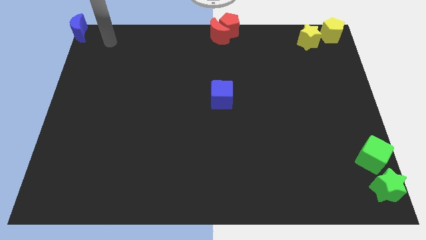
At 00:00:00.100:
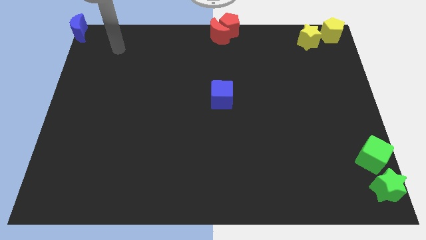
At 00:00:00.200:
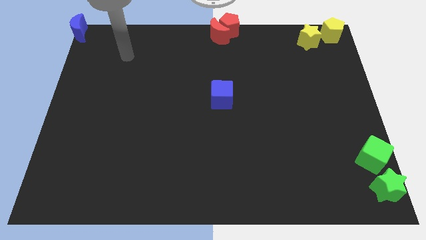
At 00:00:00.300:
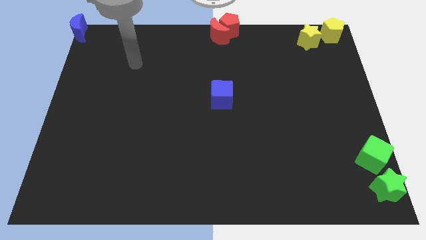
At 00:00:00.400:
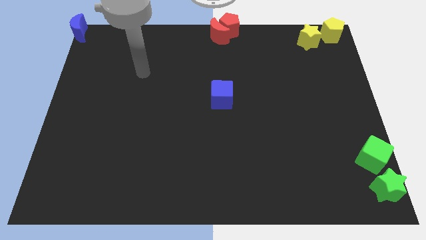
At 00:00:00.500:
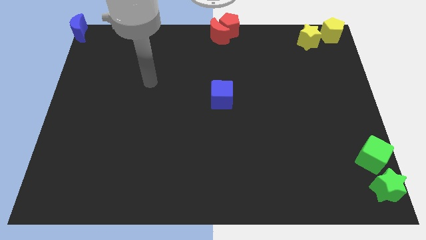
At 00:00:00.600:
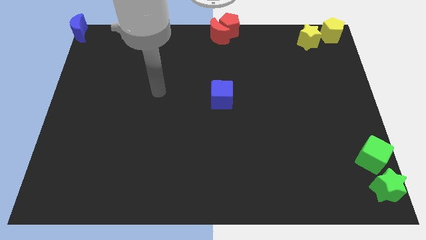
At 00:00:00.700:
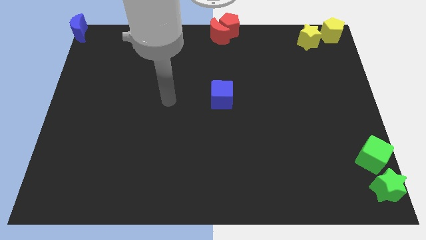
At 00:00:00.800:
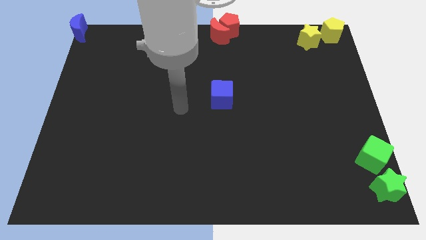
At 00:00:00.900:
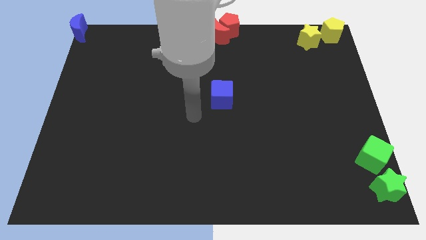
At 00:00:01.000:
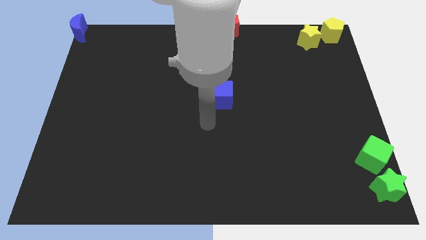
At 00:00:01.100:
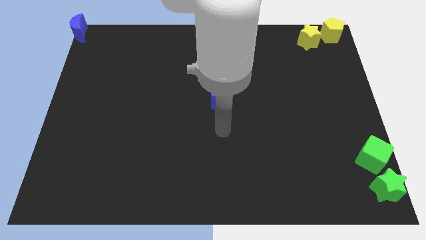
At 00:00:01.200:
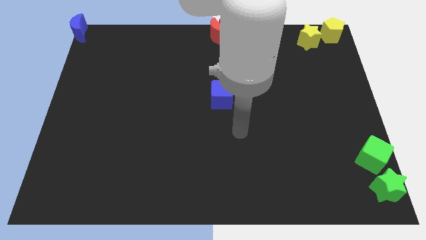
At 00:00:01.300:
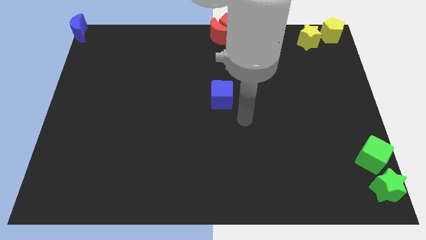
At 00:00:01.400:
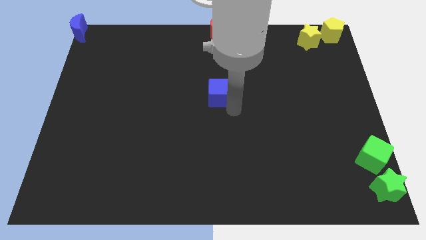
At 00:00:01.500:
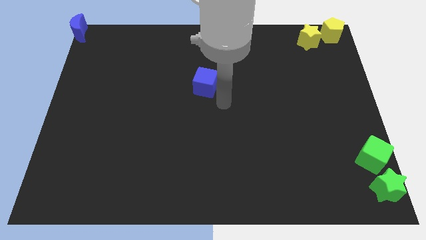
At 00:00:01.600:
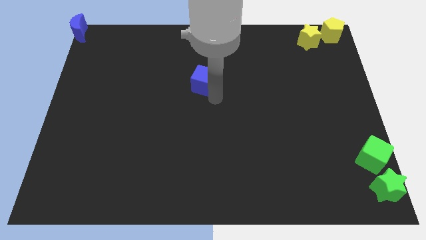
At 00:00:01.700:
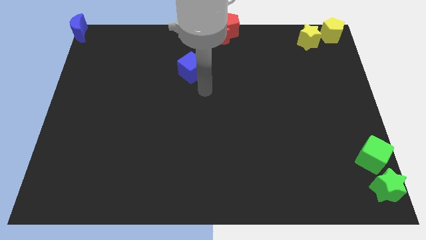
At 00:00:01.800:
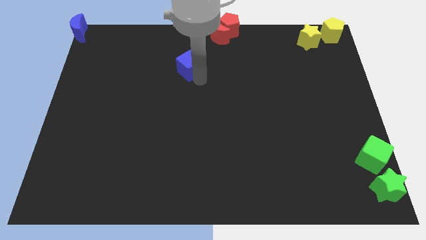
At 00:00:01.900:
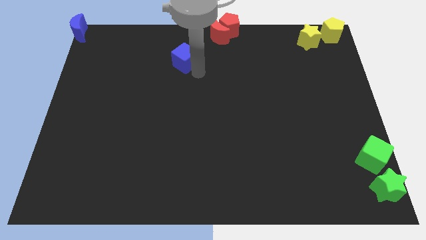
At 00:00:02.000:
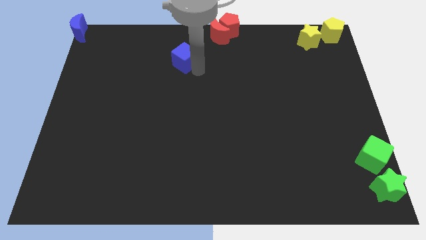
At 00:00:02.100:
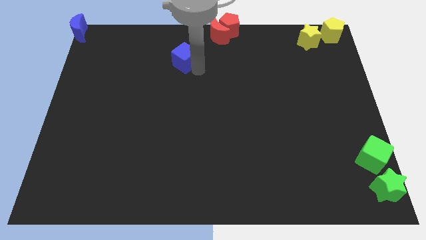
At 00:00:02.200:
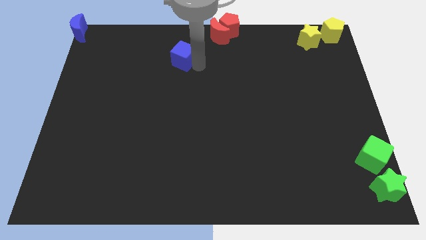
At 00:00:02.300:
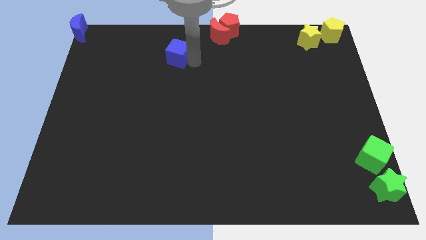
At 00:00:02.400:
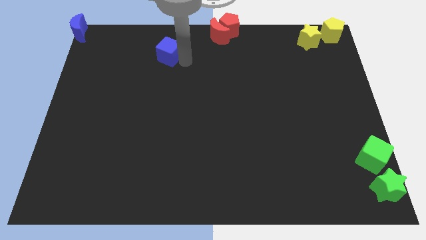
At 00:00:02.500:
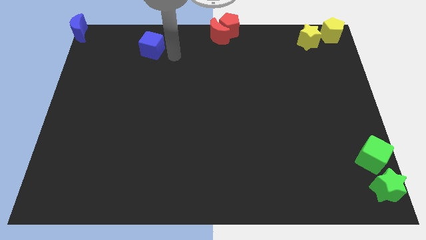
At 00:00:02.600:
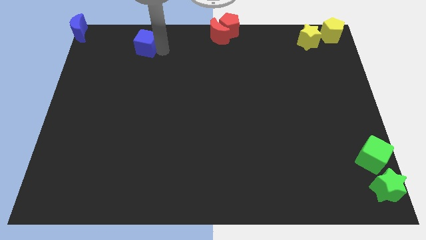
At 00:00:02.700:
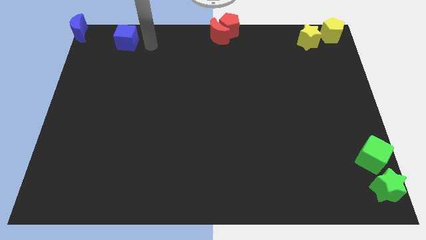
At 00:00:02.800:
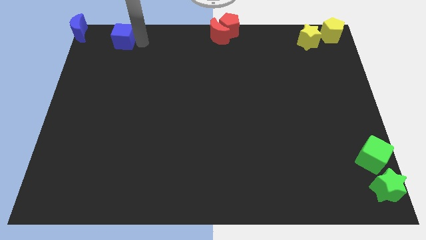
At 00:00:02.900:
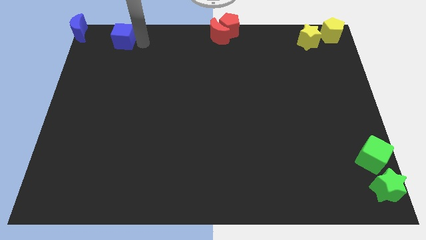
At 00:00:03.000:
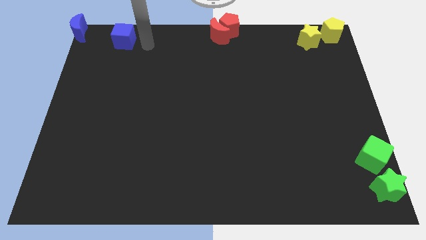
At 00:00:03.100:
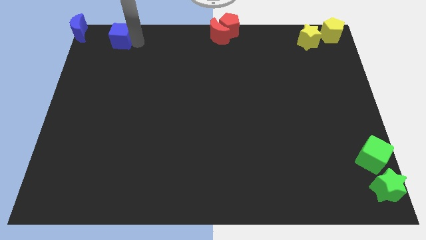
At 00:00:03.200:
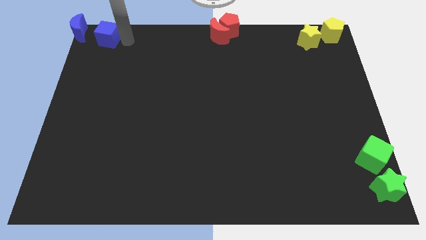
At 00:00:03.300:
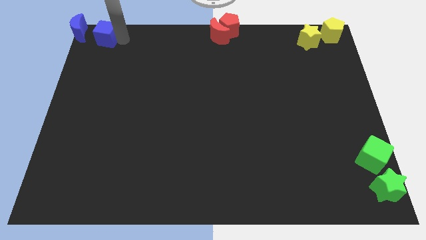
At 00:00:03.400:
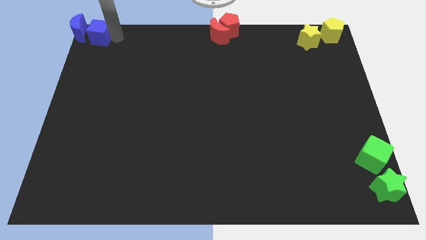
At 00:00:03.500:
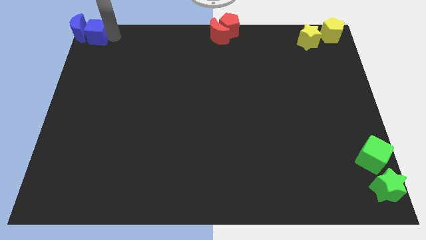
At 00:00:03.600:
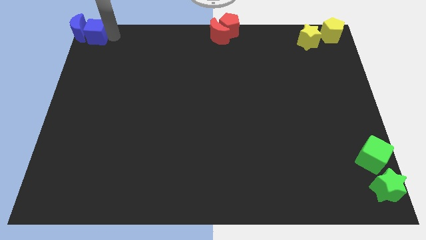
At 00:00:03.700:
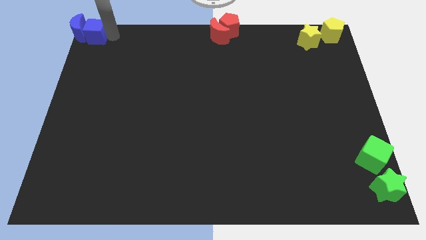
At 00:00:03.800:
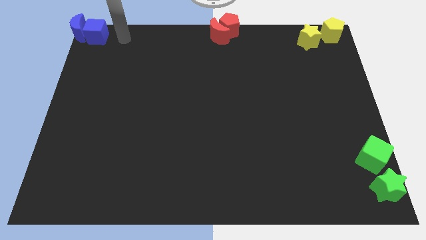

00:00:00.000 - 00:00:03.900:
move the blue cube at the right side of the blue crescent

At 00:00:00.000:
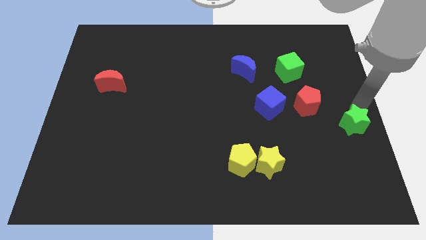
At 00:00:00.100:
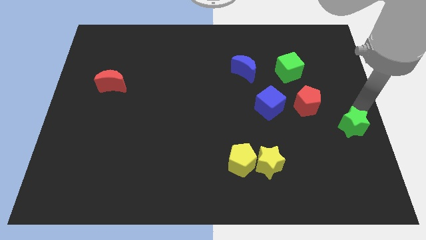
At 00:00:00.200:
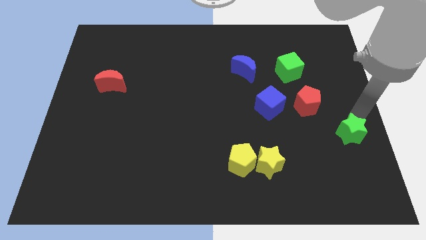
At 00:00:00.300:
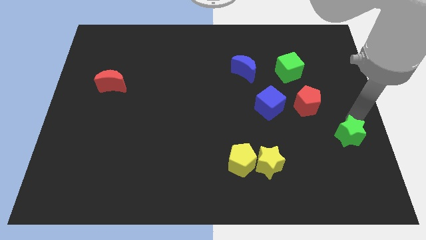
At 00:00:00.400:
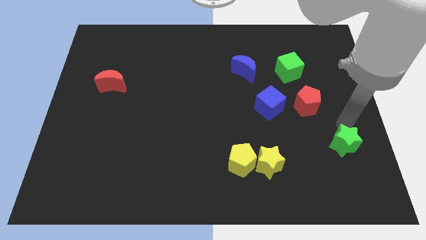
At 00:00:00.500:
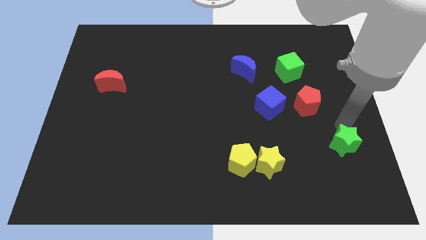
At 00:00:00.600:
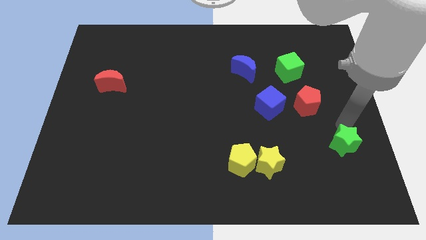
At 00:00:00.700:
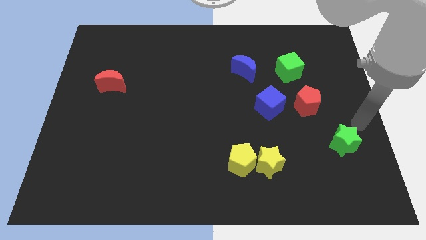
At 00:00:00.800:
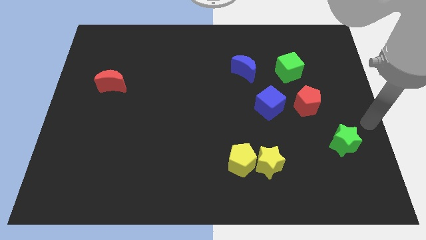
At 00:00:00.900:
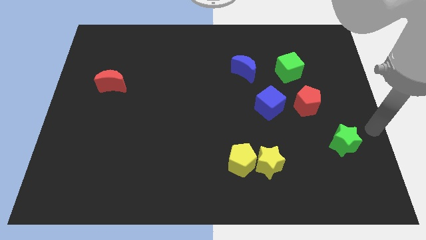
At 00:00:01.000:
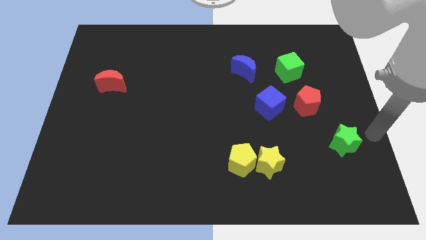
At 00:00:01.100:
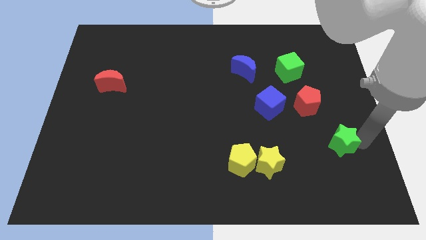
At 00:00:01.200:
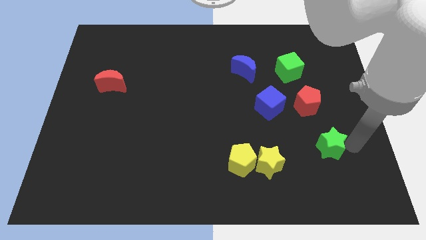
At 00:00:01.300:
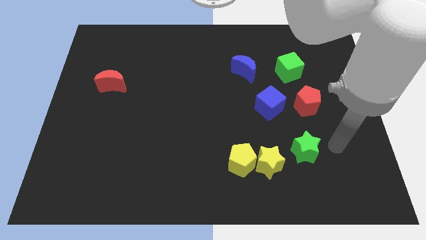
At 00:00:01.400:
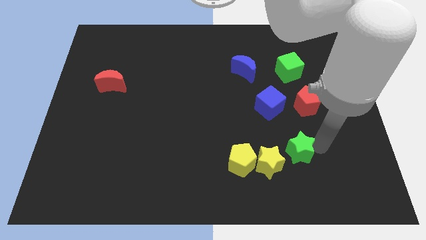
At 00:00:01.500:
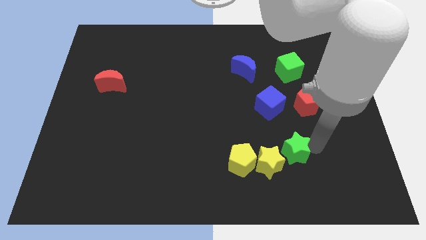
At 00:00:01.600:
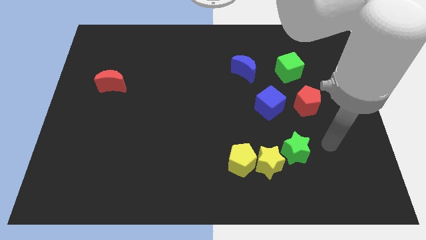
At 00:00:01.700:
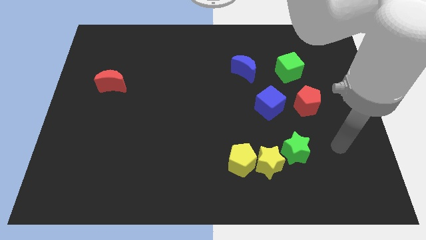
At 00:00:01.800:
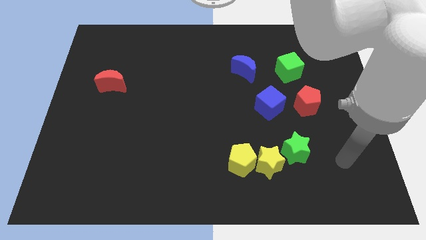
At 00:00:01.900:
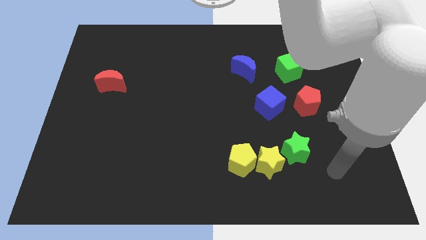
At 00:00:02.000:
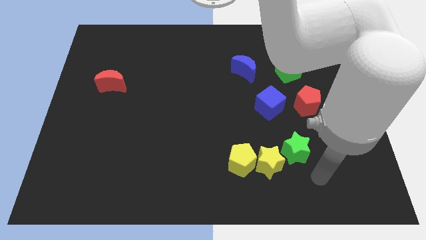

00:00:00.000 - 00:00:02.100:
move green star towards yellow star

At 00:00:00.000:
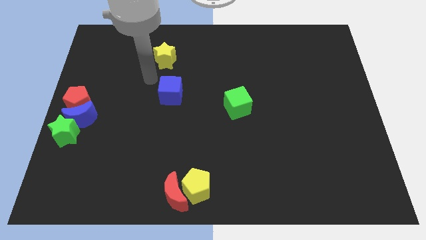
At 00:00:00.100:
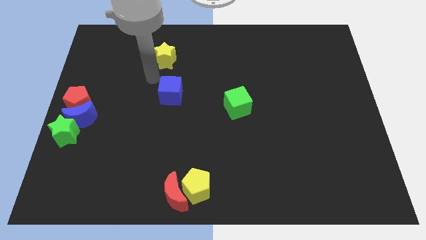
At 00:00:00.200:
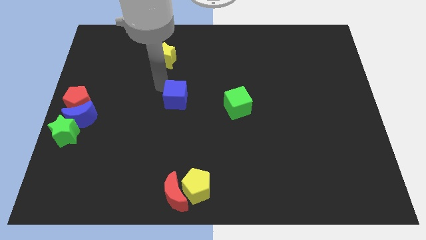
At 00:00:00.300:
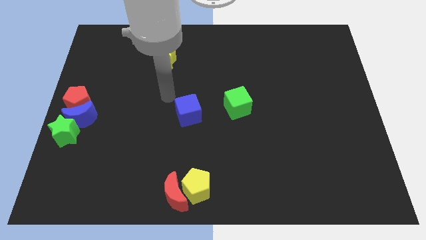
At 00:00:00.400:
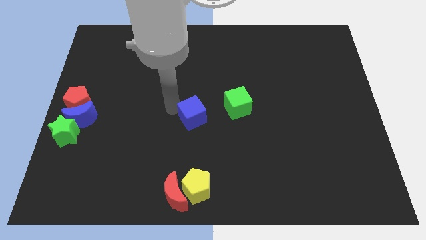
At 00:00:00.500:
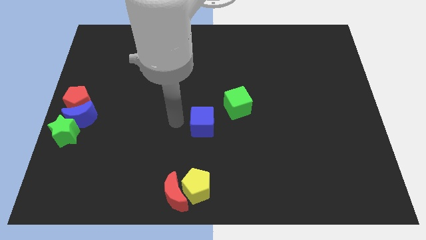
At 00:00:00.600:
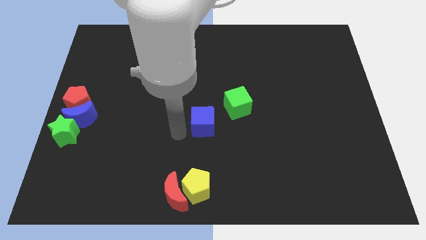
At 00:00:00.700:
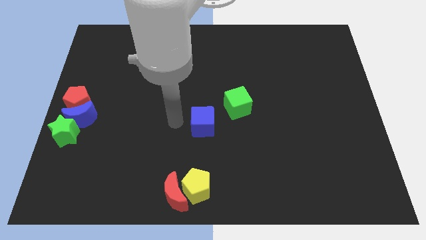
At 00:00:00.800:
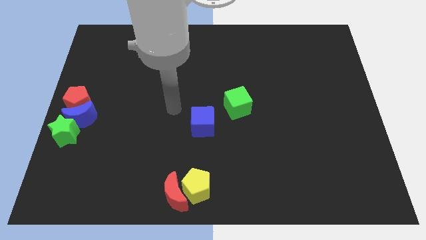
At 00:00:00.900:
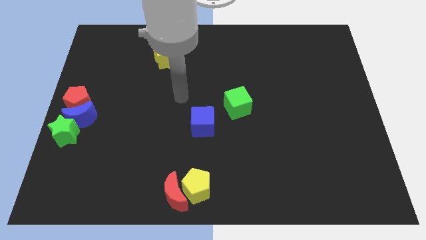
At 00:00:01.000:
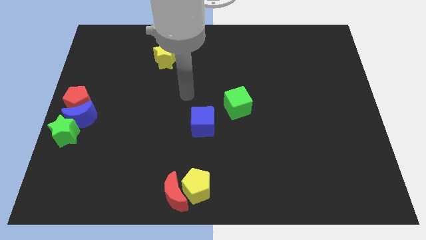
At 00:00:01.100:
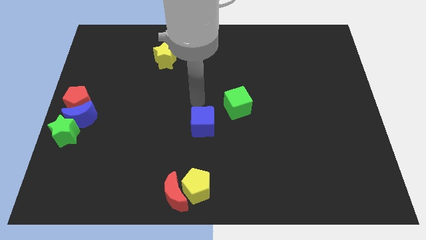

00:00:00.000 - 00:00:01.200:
move the blue cube to the bottom of the board

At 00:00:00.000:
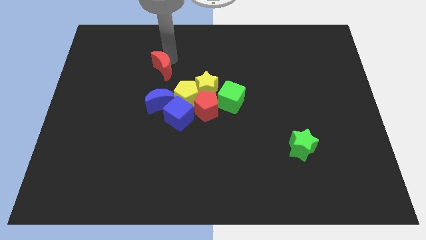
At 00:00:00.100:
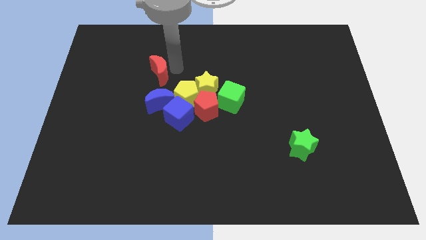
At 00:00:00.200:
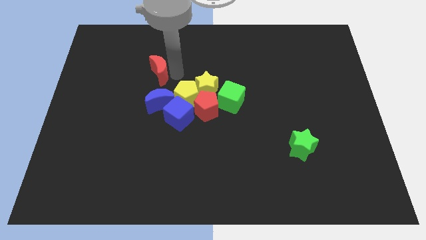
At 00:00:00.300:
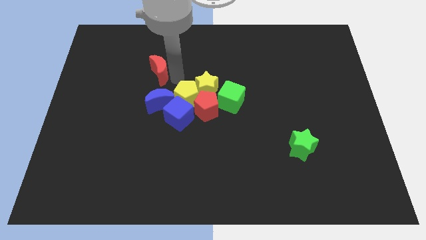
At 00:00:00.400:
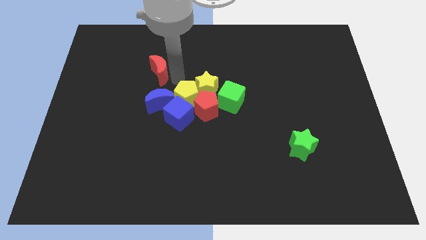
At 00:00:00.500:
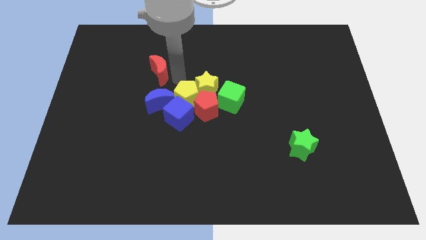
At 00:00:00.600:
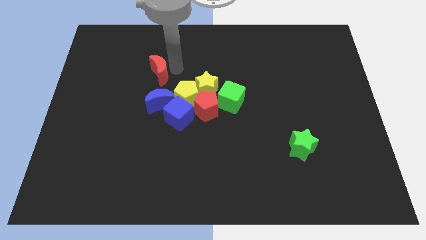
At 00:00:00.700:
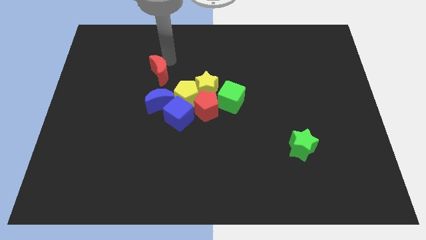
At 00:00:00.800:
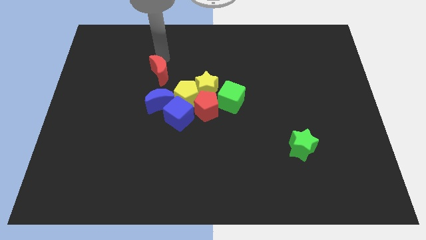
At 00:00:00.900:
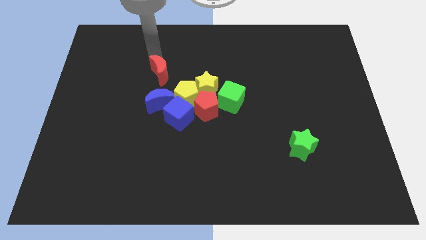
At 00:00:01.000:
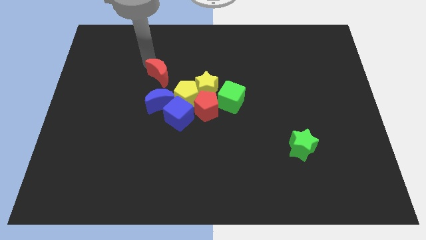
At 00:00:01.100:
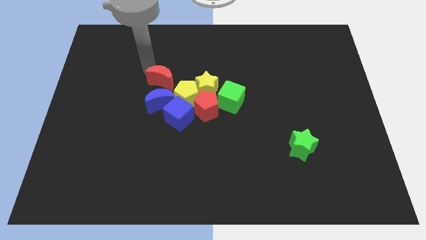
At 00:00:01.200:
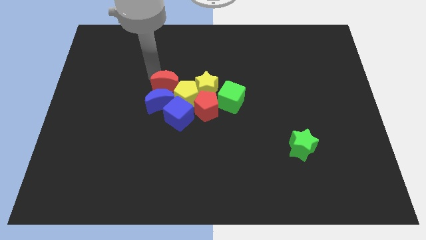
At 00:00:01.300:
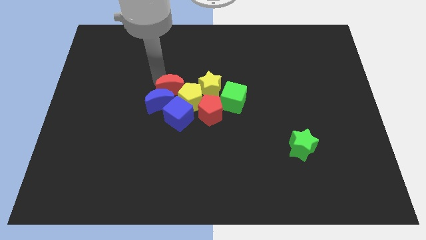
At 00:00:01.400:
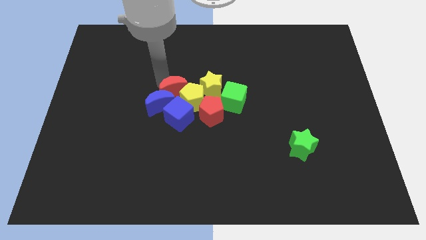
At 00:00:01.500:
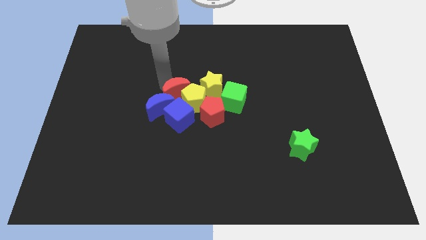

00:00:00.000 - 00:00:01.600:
push the red moon into the blue moon and yellow pentagon
